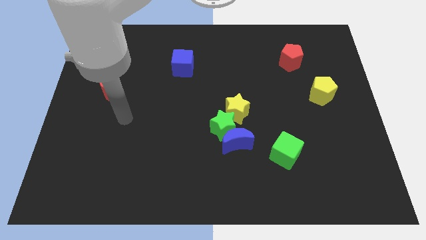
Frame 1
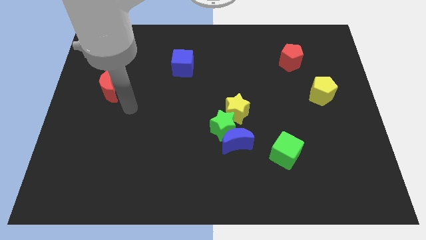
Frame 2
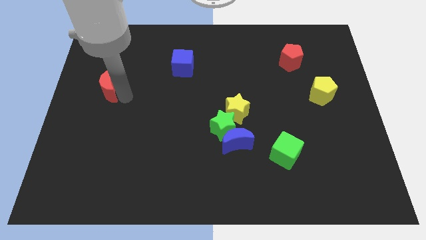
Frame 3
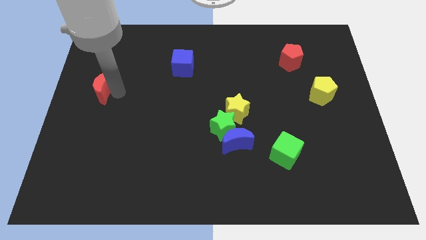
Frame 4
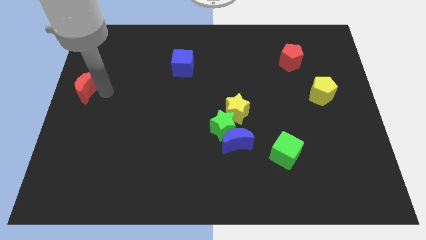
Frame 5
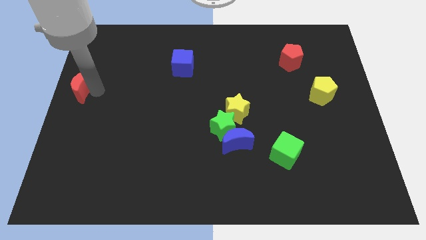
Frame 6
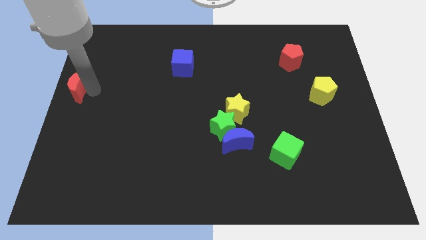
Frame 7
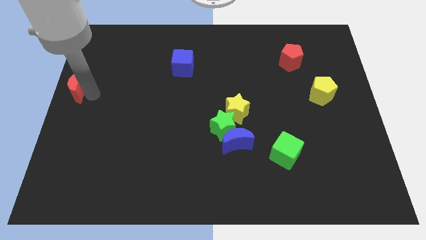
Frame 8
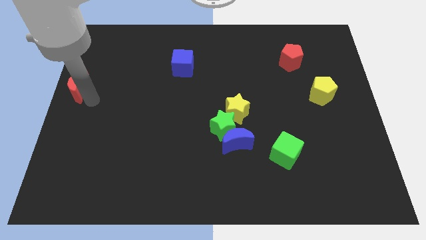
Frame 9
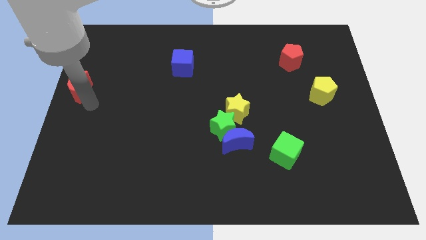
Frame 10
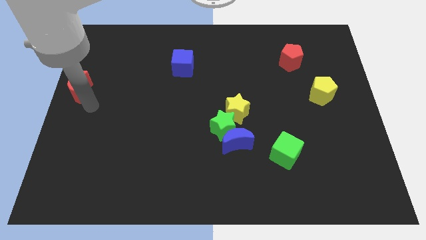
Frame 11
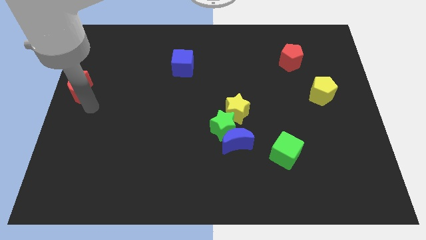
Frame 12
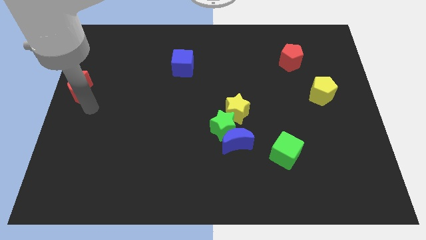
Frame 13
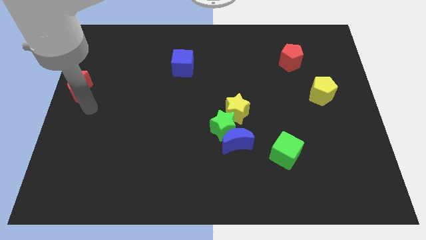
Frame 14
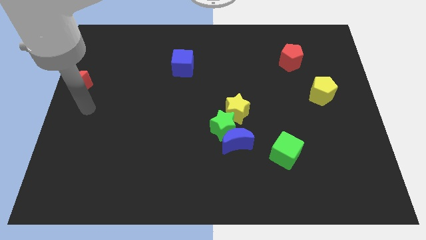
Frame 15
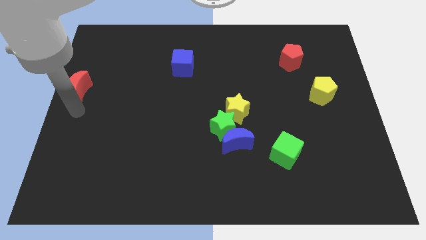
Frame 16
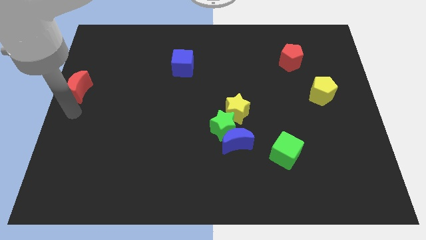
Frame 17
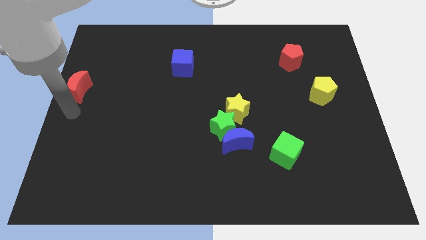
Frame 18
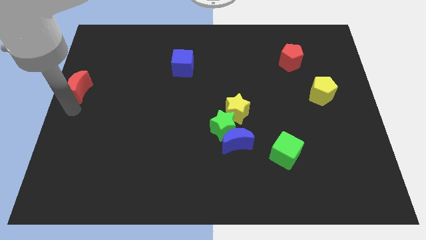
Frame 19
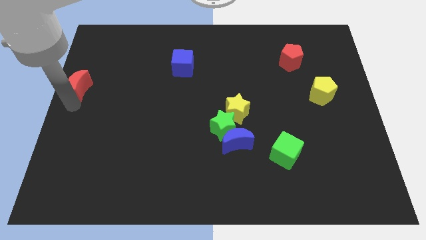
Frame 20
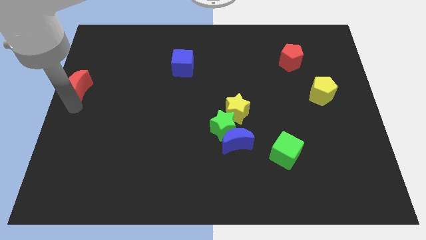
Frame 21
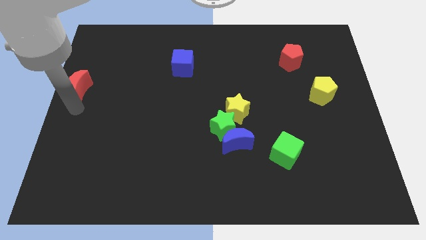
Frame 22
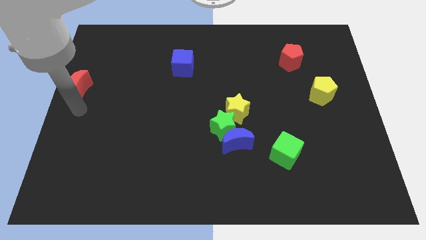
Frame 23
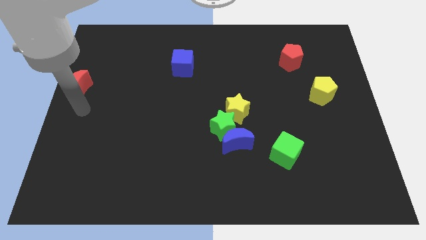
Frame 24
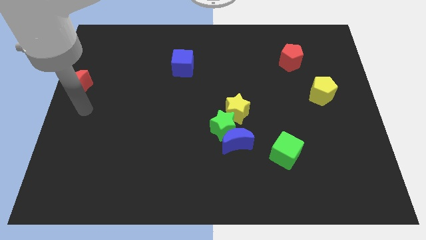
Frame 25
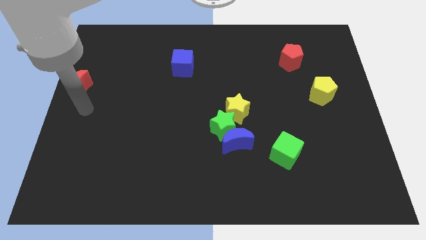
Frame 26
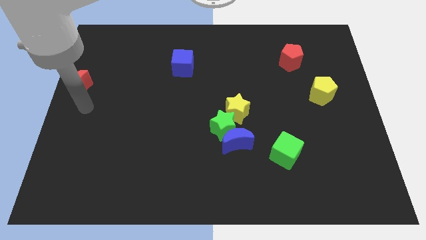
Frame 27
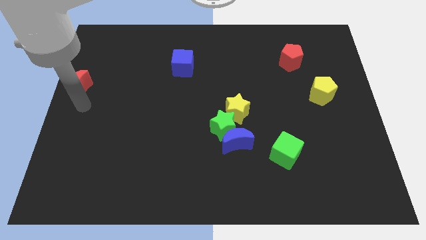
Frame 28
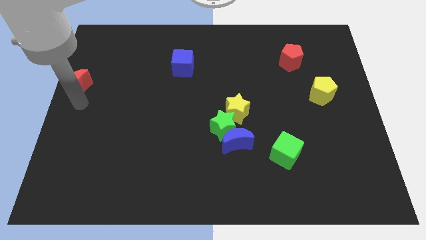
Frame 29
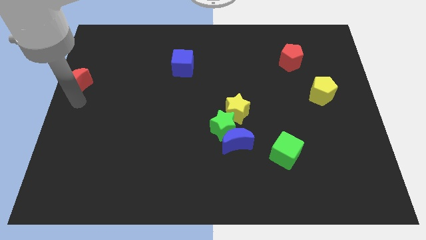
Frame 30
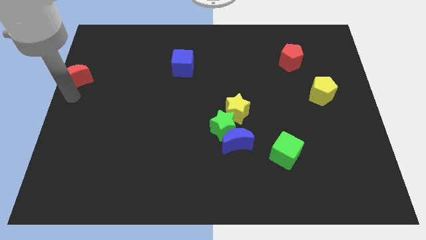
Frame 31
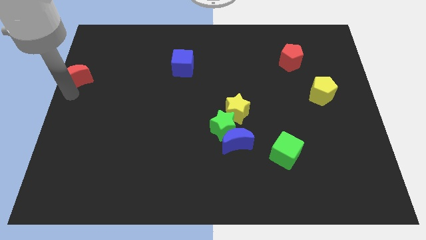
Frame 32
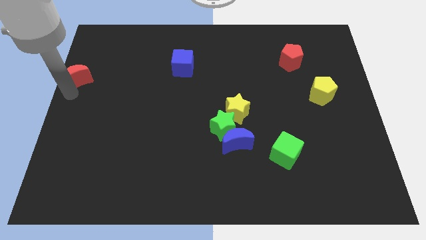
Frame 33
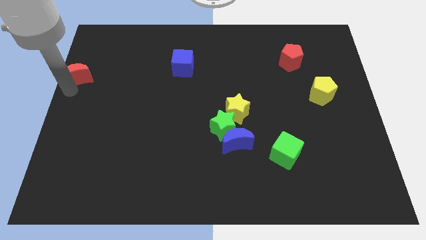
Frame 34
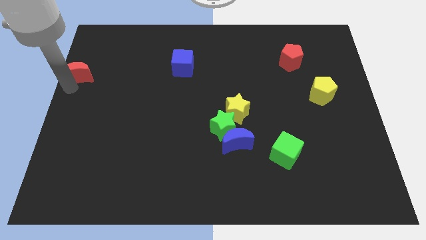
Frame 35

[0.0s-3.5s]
push the red moon towards the top left

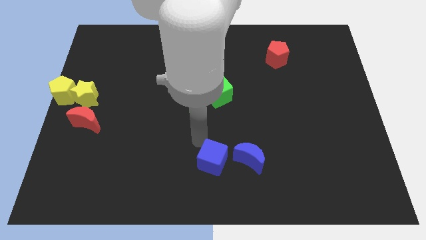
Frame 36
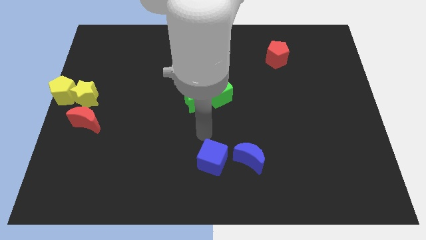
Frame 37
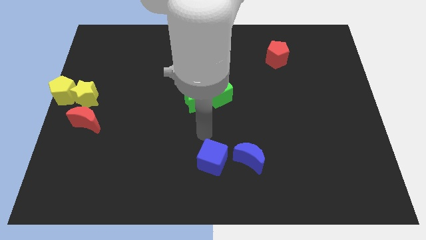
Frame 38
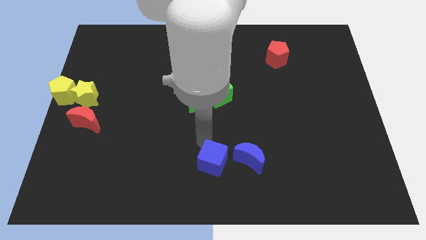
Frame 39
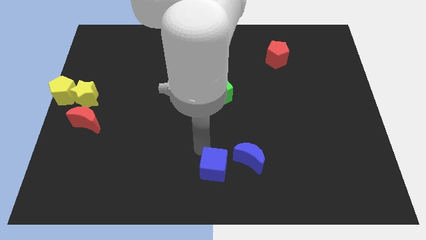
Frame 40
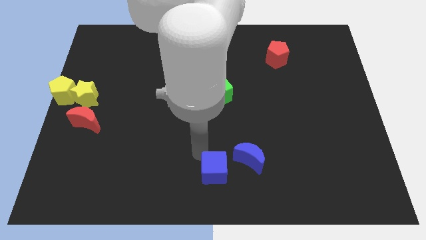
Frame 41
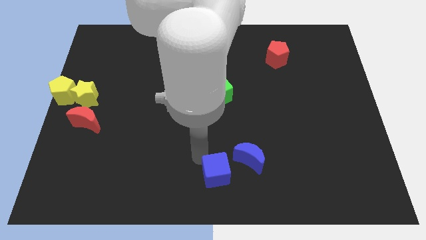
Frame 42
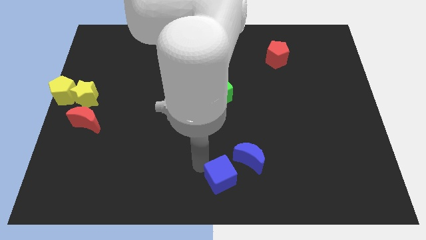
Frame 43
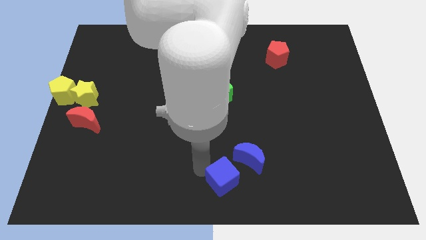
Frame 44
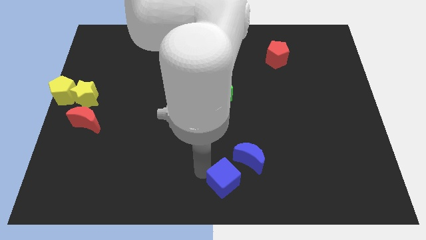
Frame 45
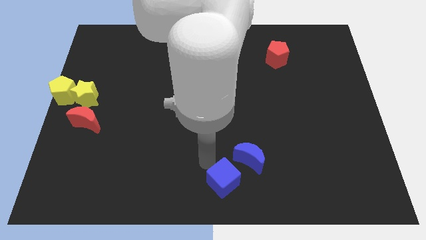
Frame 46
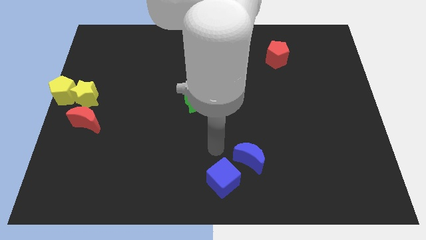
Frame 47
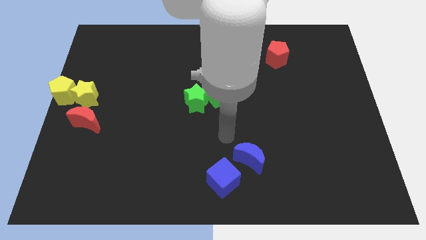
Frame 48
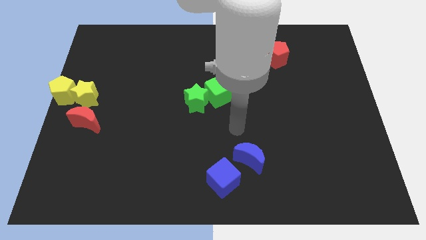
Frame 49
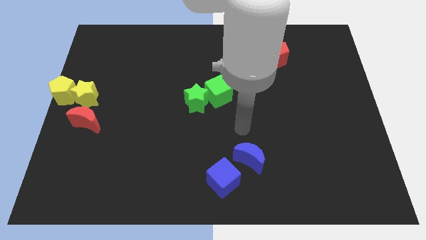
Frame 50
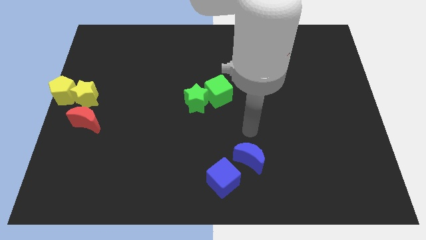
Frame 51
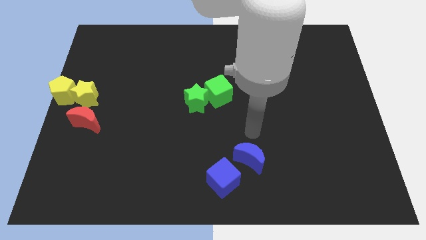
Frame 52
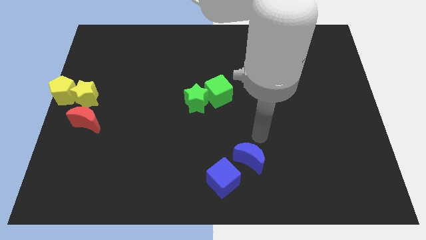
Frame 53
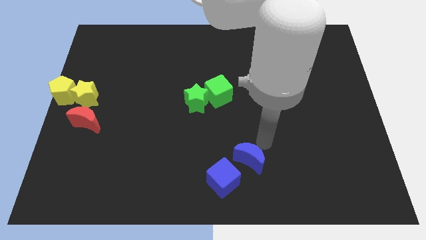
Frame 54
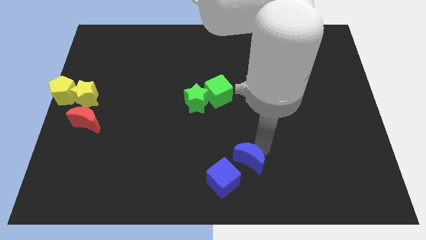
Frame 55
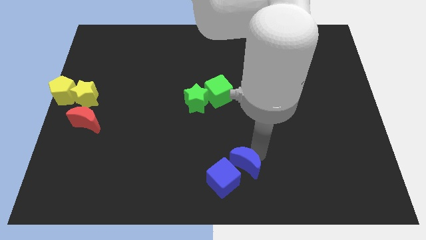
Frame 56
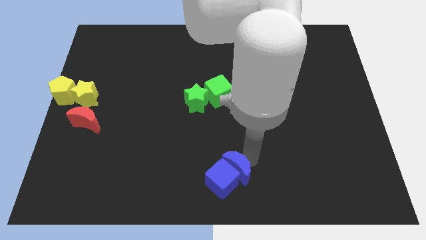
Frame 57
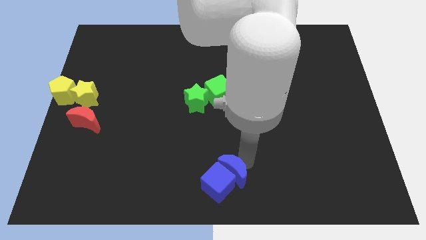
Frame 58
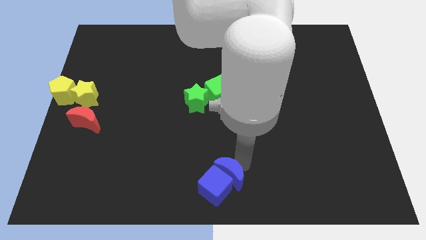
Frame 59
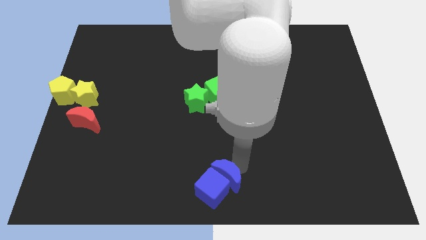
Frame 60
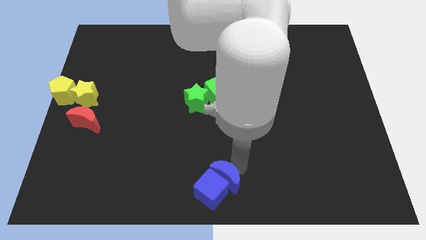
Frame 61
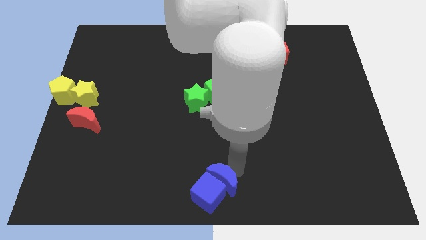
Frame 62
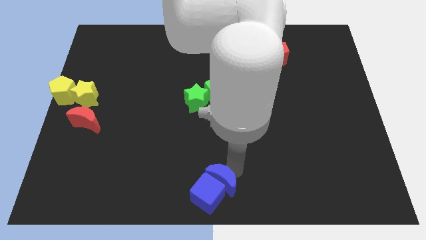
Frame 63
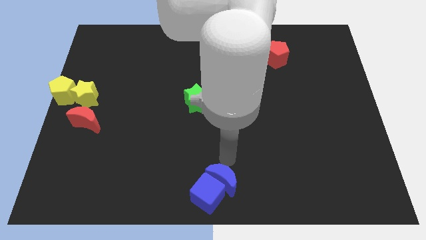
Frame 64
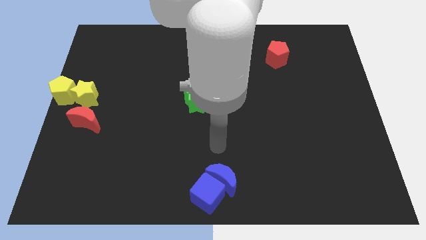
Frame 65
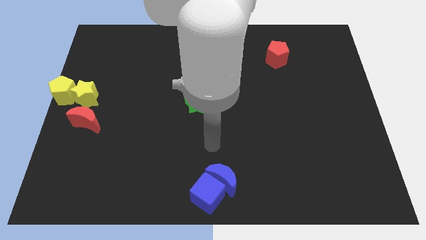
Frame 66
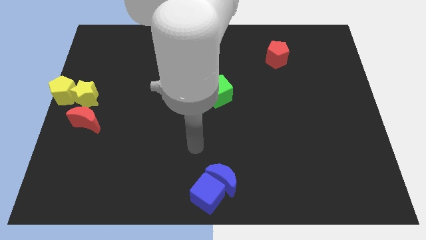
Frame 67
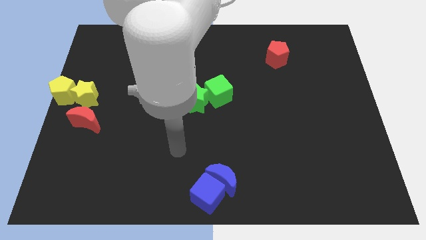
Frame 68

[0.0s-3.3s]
push the blue blocks together to the bottom center

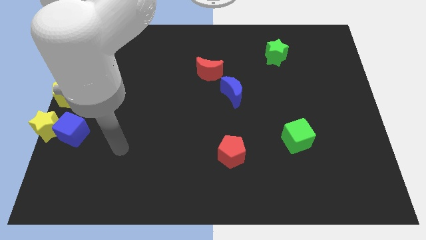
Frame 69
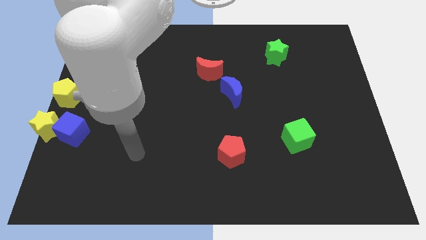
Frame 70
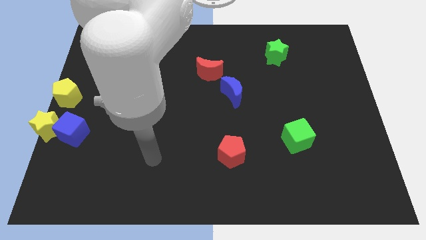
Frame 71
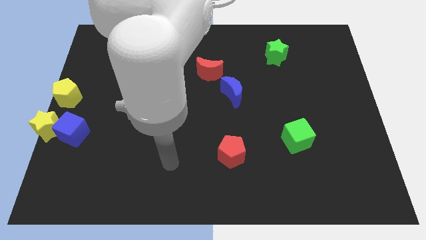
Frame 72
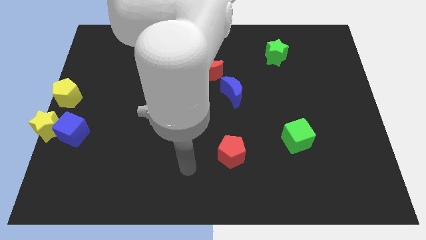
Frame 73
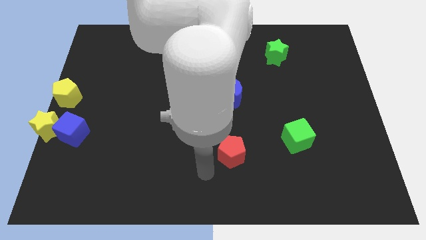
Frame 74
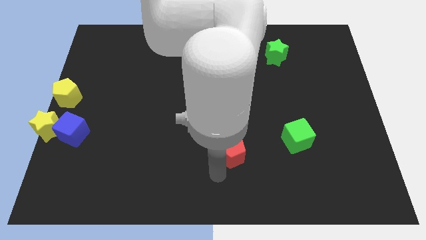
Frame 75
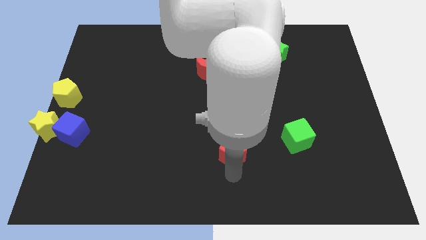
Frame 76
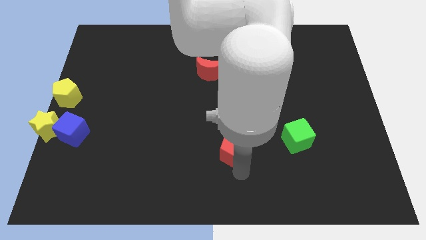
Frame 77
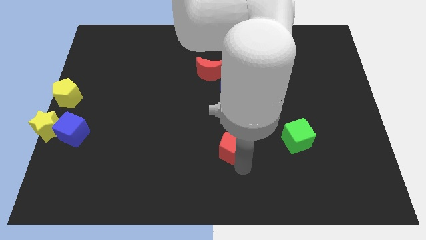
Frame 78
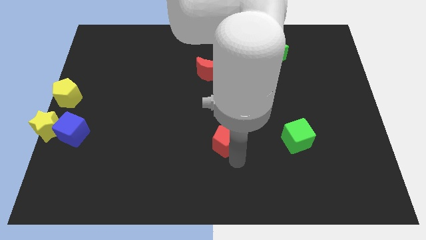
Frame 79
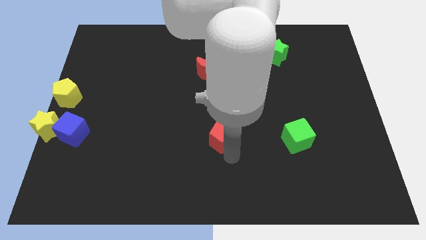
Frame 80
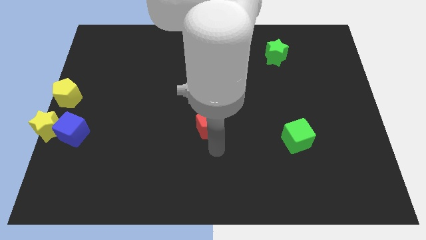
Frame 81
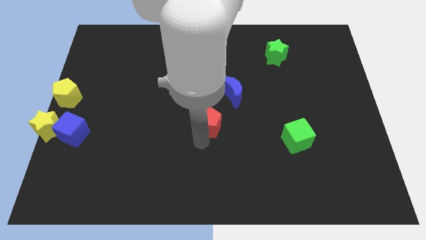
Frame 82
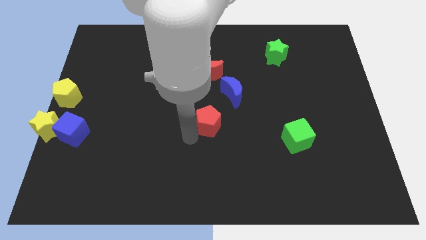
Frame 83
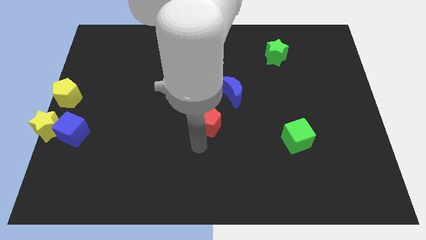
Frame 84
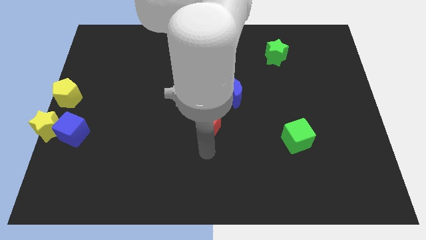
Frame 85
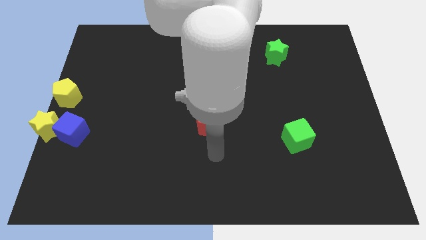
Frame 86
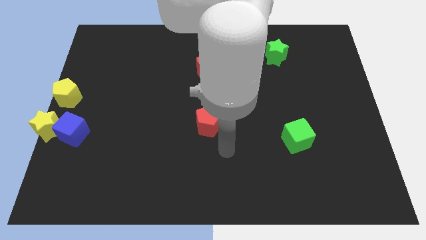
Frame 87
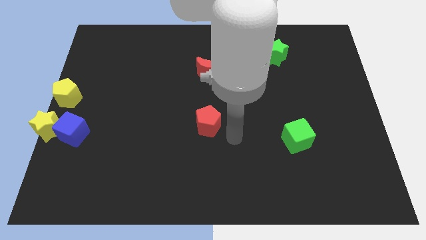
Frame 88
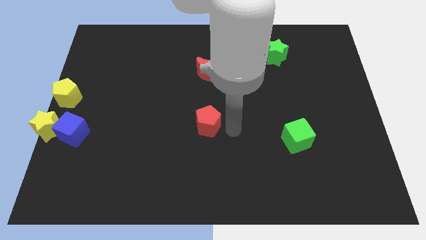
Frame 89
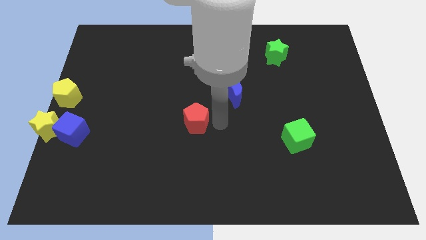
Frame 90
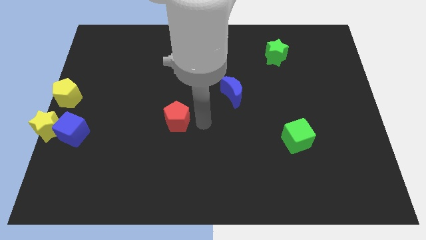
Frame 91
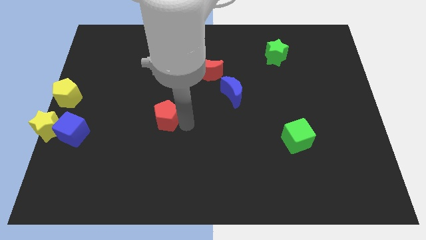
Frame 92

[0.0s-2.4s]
slide the red pentagon to the left side of the board
